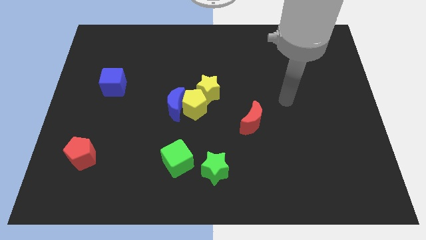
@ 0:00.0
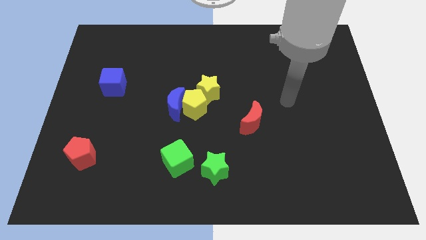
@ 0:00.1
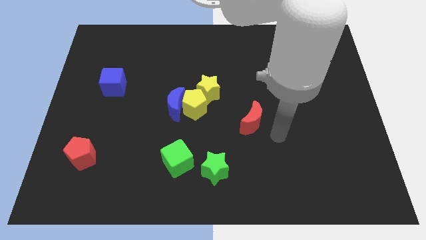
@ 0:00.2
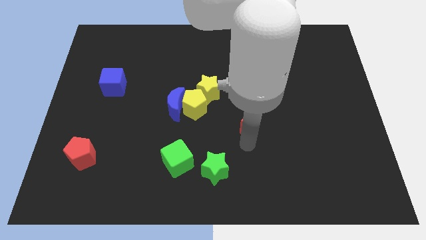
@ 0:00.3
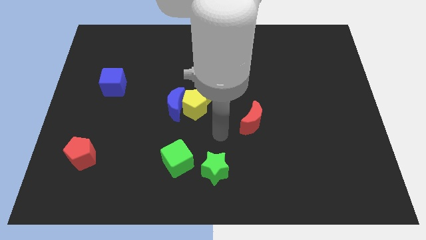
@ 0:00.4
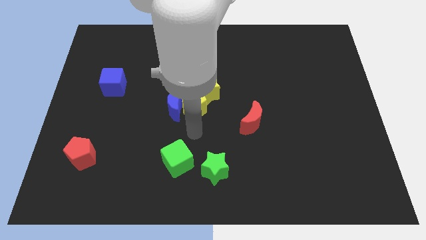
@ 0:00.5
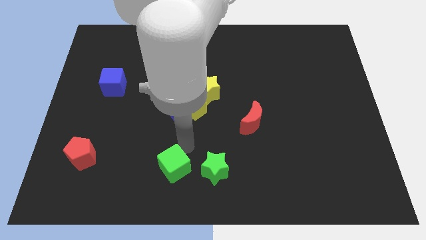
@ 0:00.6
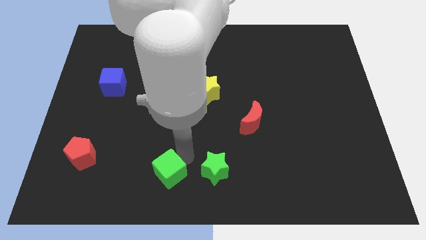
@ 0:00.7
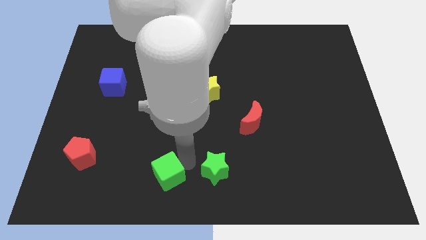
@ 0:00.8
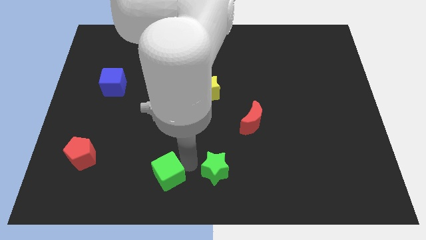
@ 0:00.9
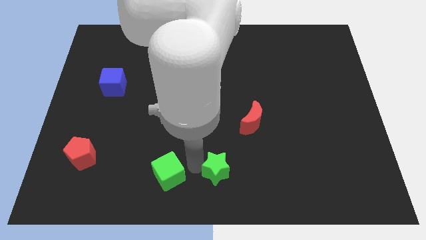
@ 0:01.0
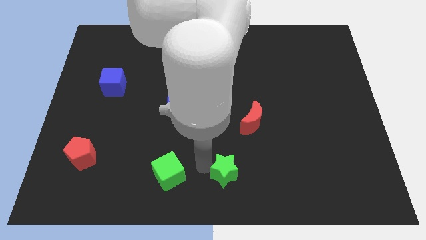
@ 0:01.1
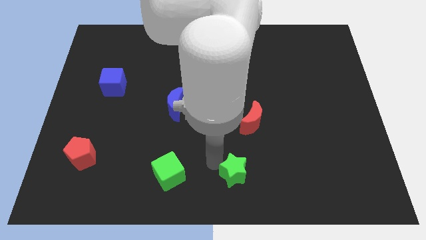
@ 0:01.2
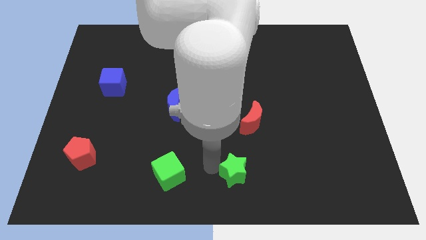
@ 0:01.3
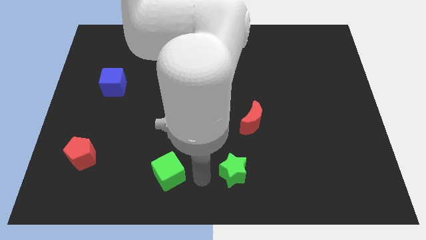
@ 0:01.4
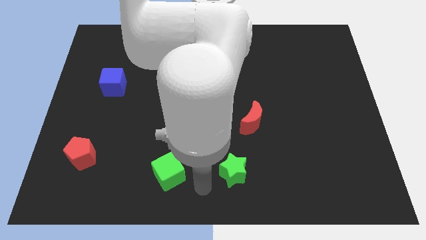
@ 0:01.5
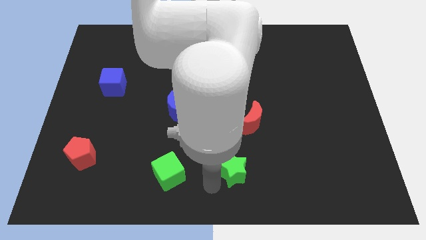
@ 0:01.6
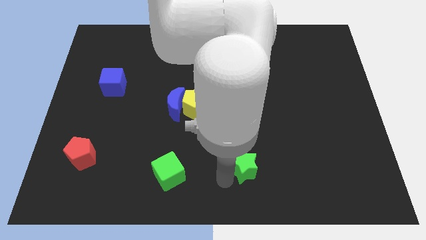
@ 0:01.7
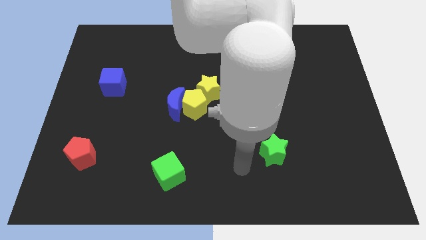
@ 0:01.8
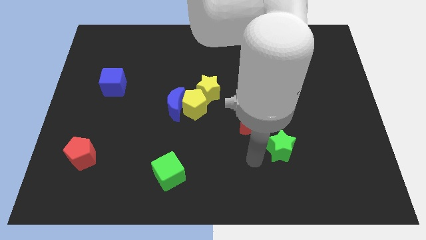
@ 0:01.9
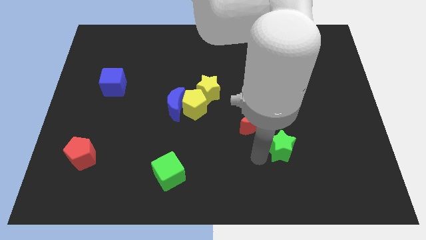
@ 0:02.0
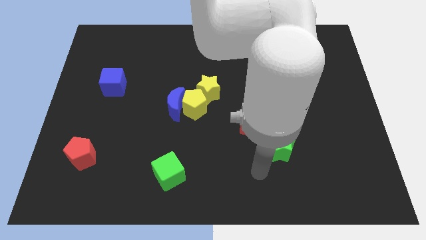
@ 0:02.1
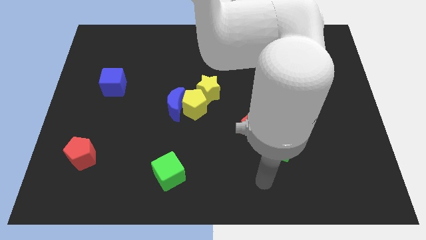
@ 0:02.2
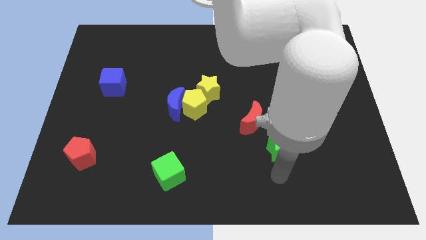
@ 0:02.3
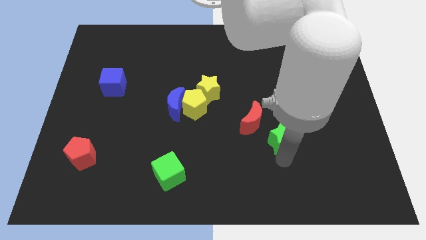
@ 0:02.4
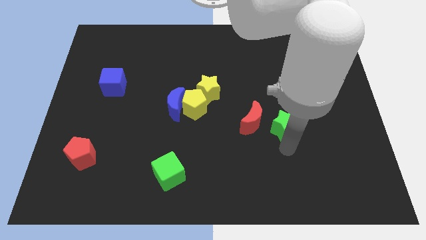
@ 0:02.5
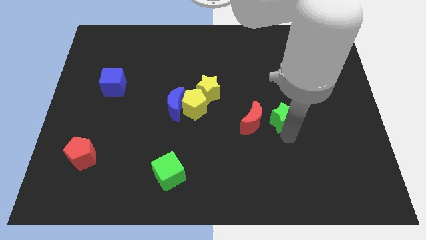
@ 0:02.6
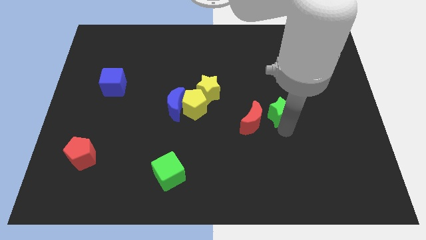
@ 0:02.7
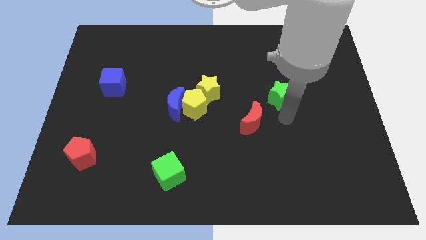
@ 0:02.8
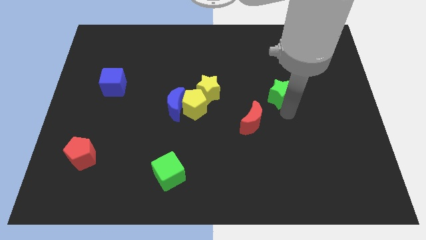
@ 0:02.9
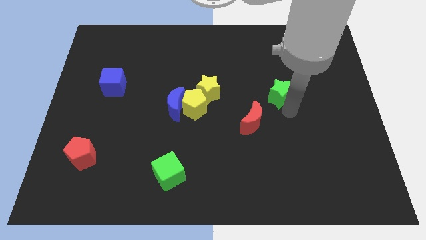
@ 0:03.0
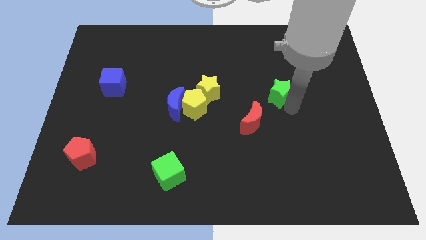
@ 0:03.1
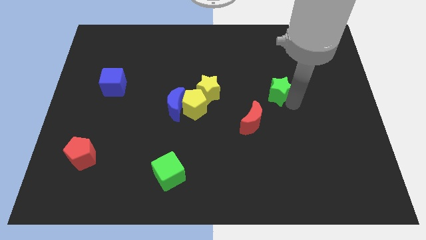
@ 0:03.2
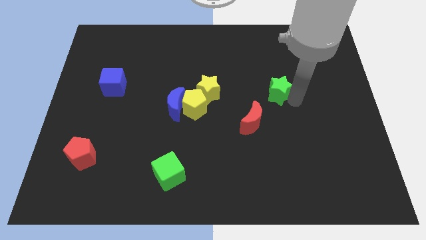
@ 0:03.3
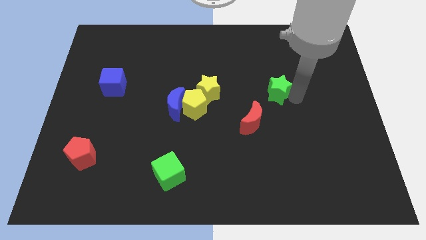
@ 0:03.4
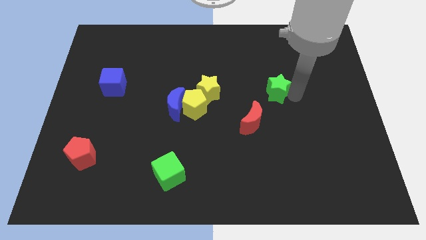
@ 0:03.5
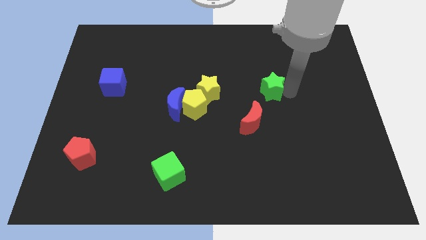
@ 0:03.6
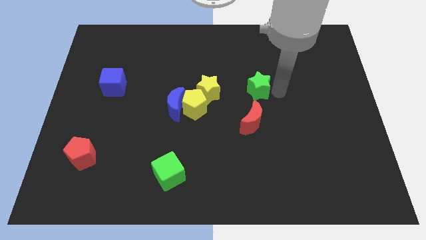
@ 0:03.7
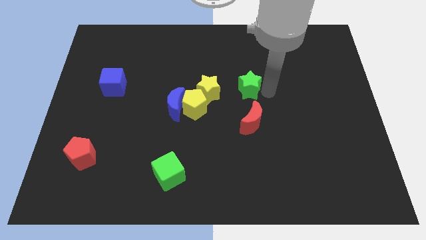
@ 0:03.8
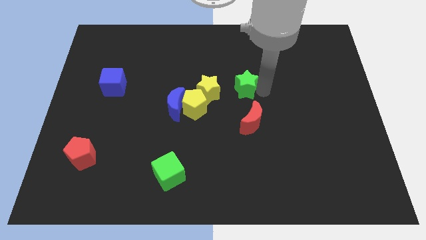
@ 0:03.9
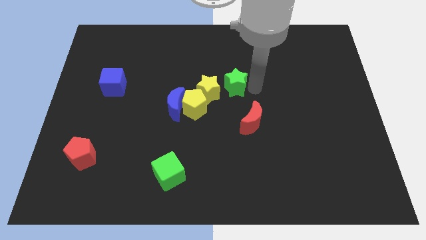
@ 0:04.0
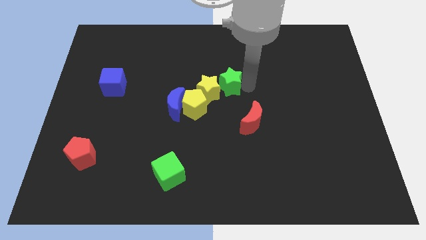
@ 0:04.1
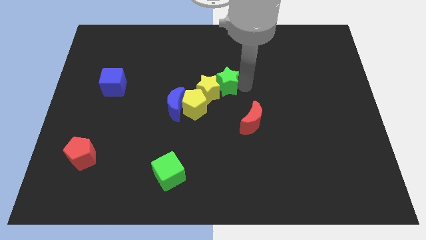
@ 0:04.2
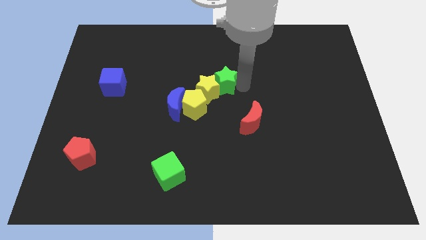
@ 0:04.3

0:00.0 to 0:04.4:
slide the green star towards the yellow star

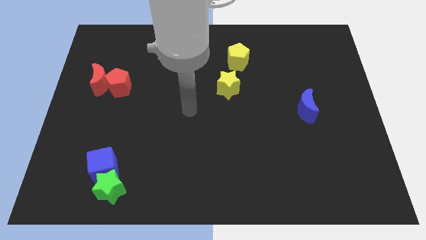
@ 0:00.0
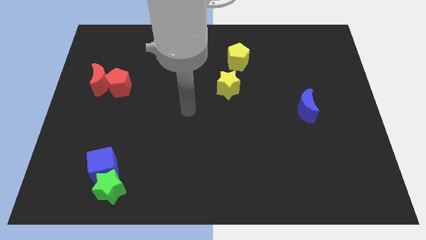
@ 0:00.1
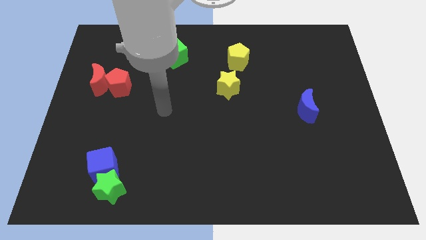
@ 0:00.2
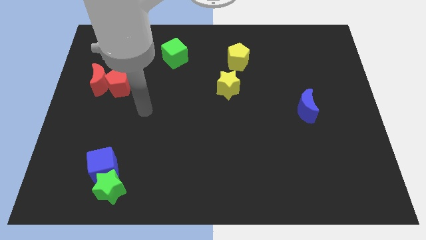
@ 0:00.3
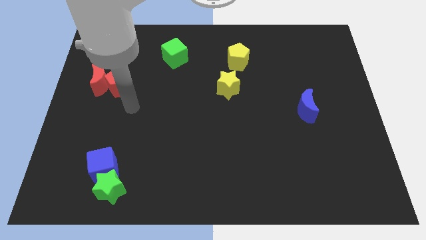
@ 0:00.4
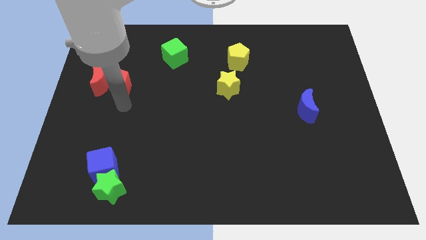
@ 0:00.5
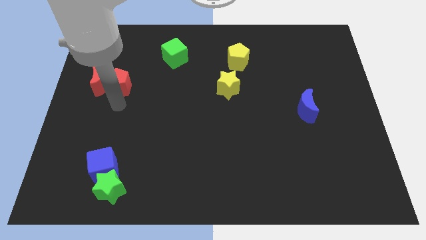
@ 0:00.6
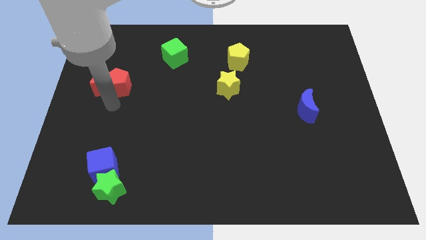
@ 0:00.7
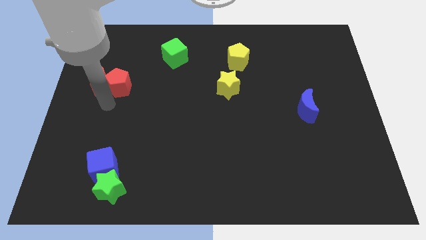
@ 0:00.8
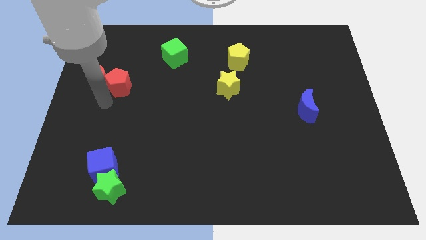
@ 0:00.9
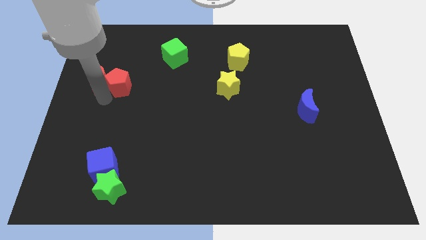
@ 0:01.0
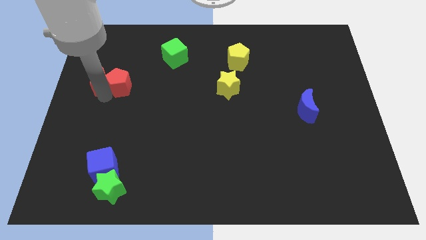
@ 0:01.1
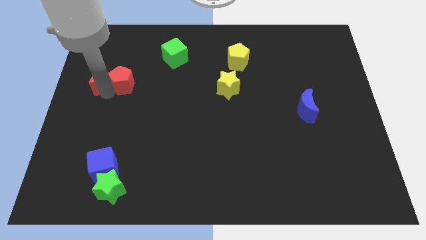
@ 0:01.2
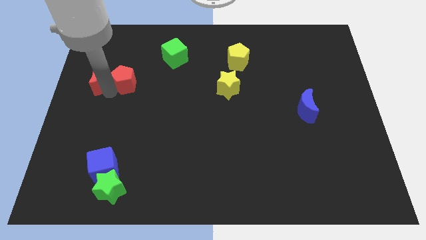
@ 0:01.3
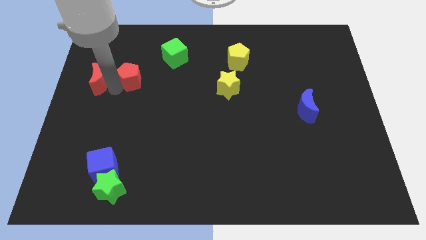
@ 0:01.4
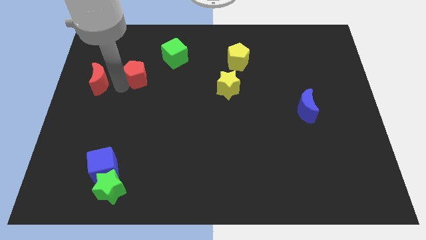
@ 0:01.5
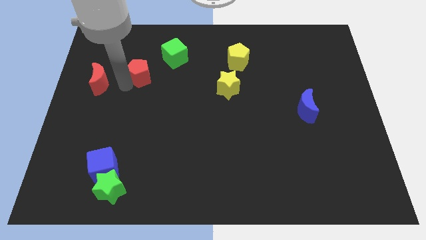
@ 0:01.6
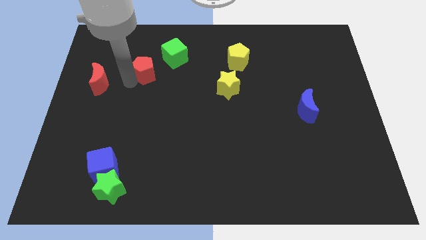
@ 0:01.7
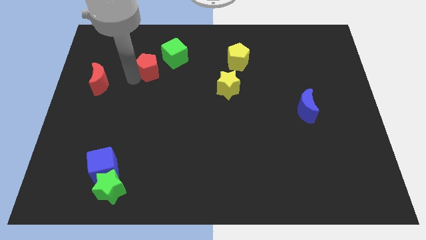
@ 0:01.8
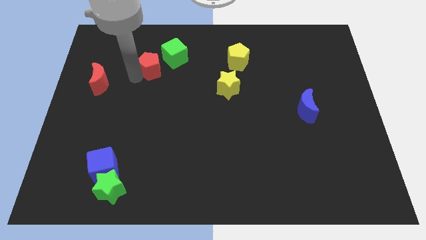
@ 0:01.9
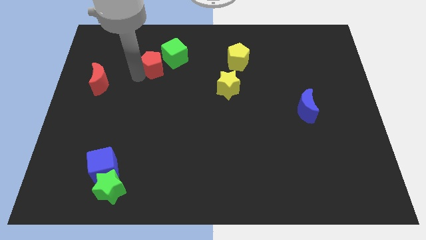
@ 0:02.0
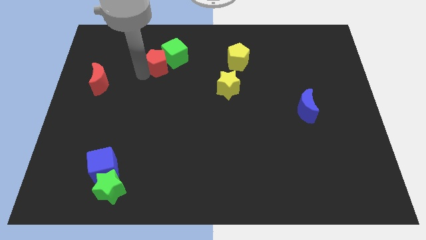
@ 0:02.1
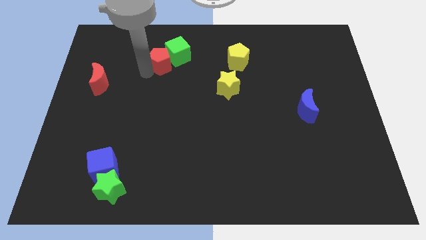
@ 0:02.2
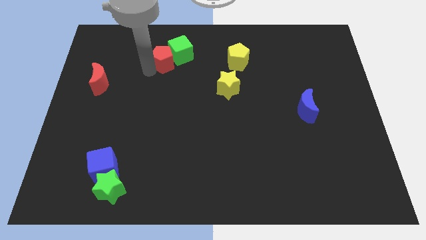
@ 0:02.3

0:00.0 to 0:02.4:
push the red pentagon close to the green cube

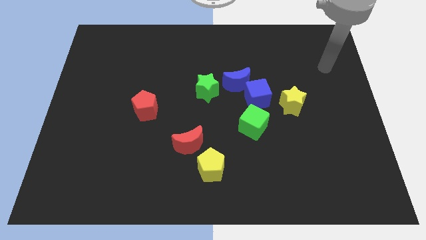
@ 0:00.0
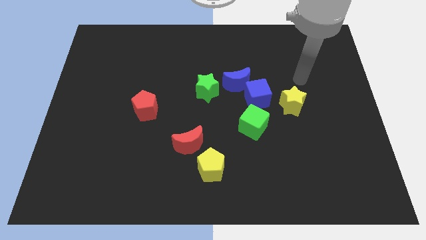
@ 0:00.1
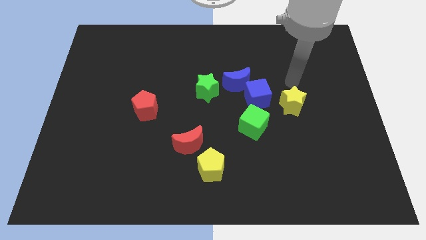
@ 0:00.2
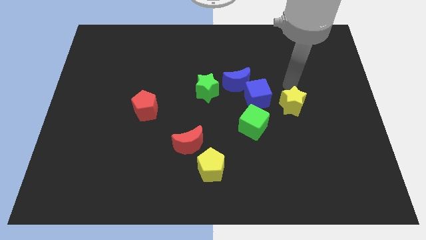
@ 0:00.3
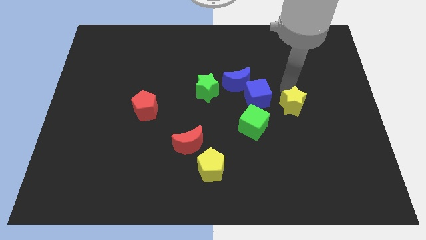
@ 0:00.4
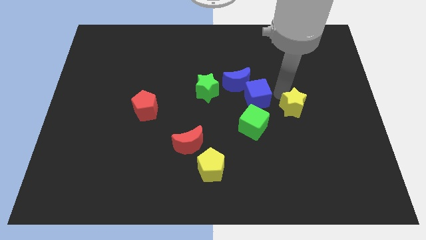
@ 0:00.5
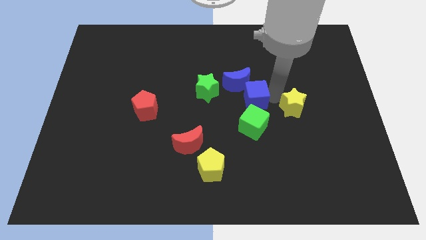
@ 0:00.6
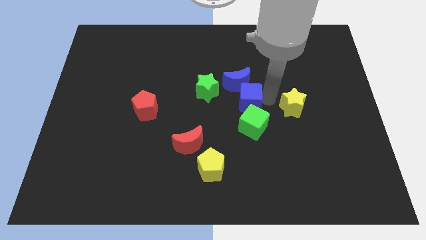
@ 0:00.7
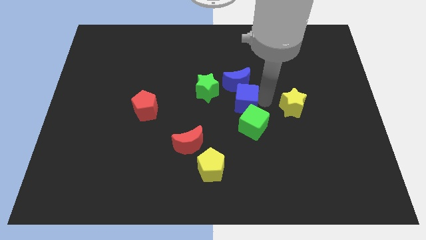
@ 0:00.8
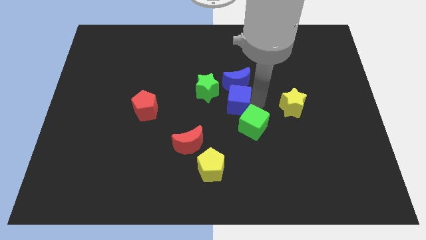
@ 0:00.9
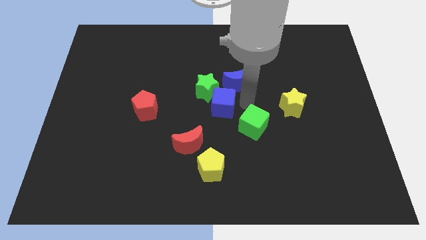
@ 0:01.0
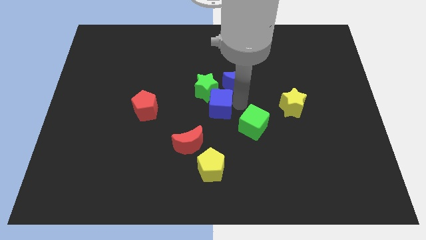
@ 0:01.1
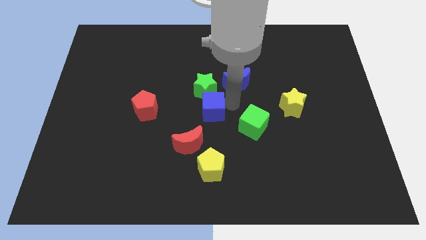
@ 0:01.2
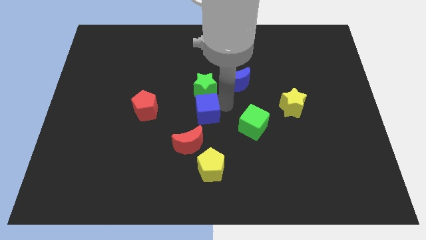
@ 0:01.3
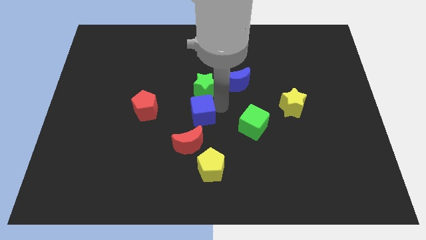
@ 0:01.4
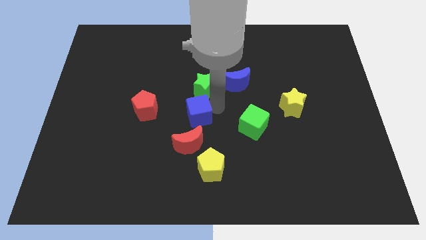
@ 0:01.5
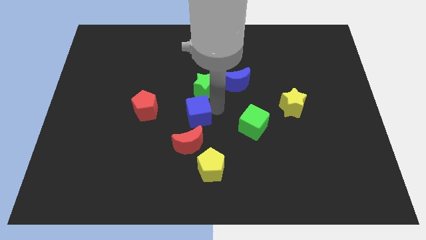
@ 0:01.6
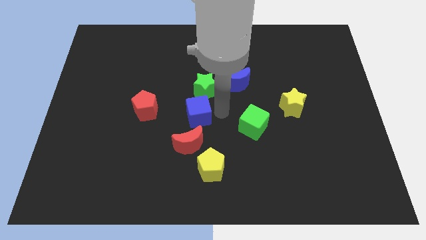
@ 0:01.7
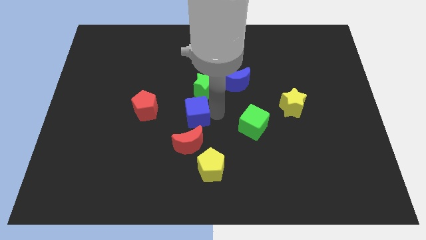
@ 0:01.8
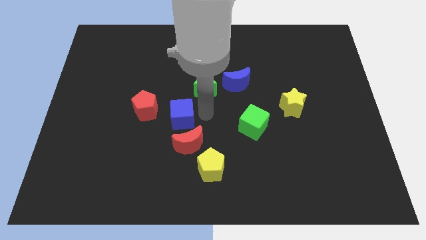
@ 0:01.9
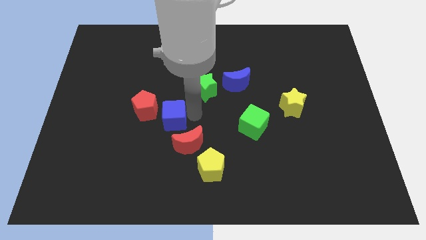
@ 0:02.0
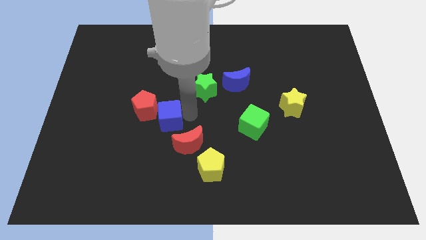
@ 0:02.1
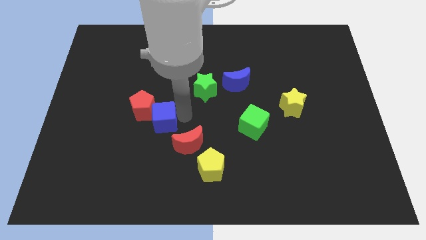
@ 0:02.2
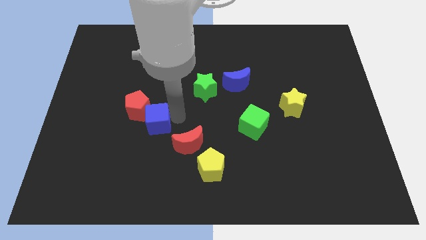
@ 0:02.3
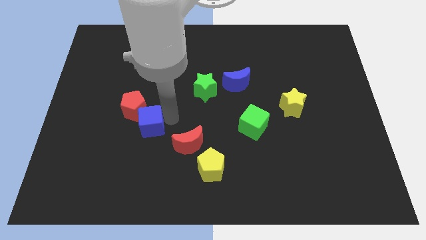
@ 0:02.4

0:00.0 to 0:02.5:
slide the blue cube to the red pentagon
